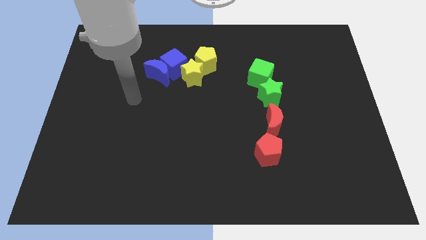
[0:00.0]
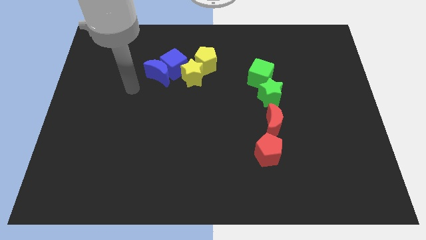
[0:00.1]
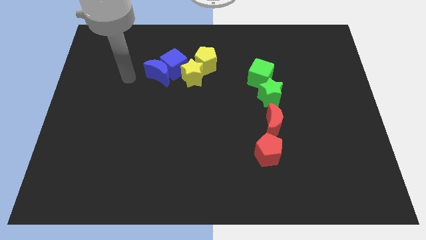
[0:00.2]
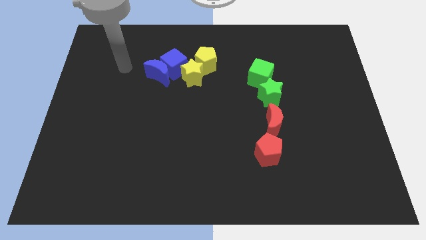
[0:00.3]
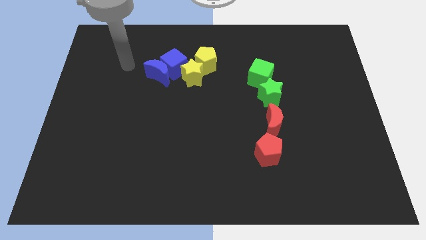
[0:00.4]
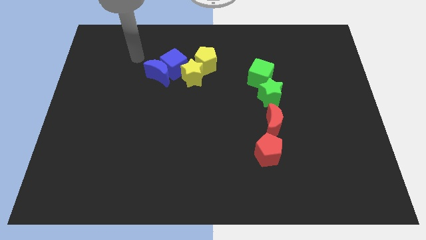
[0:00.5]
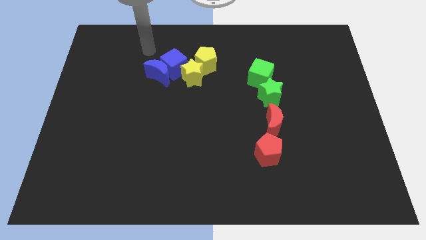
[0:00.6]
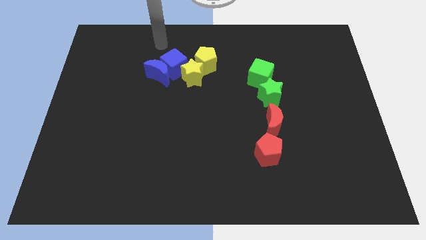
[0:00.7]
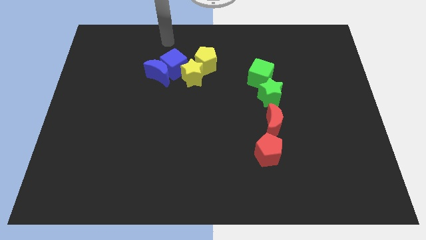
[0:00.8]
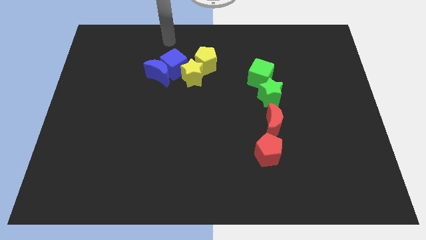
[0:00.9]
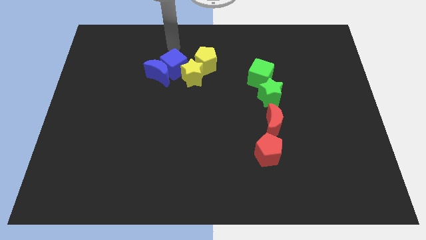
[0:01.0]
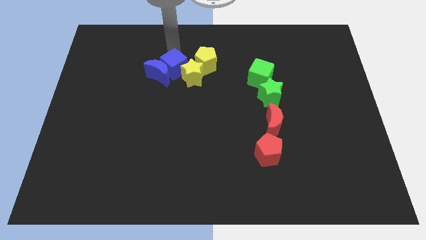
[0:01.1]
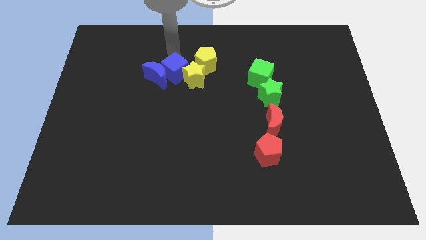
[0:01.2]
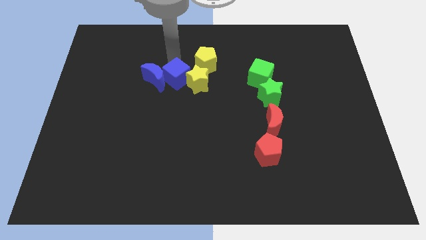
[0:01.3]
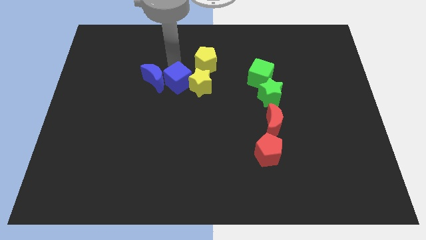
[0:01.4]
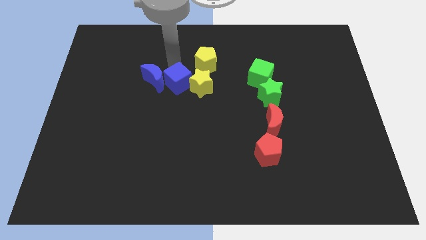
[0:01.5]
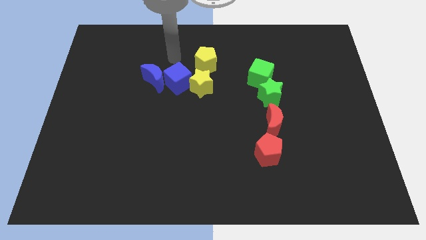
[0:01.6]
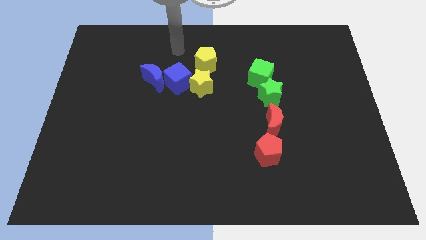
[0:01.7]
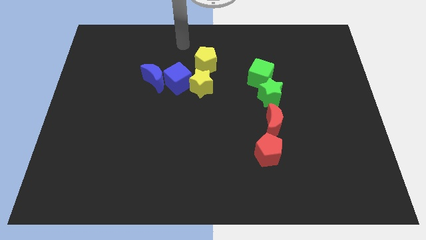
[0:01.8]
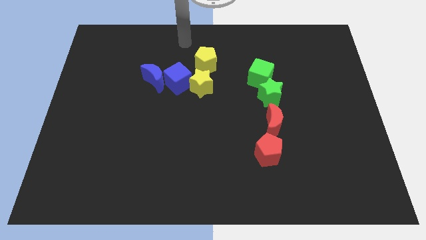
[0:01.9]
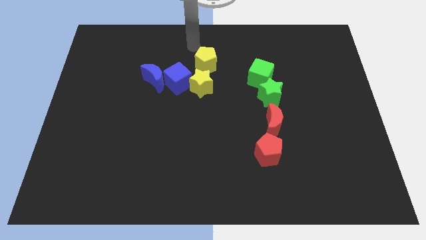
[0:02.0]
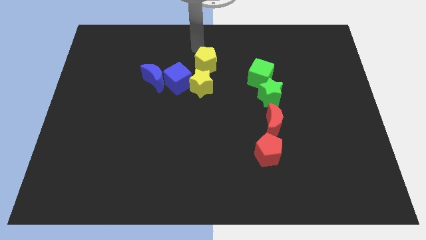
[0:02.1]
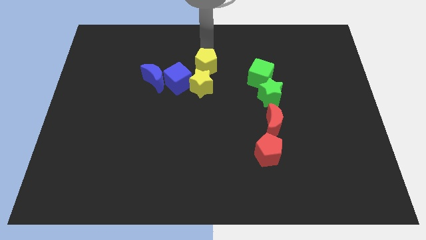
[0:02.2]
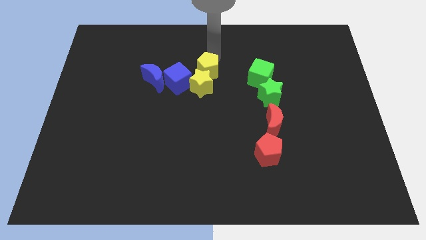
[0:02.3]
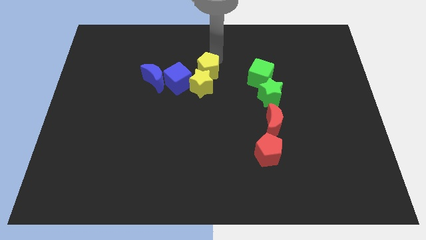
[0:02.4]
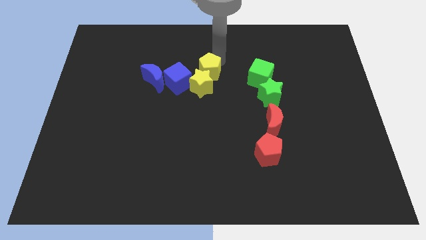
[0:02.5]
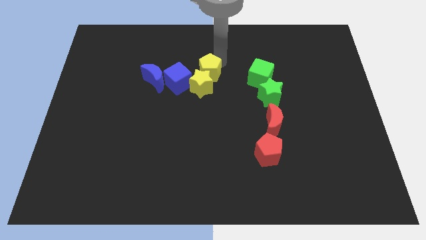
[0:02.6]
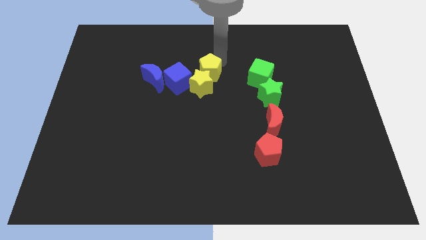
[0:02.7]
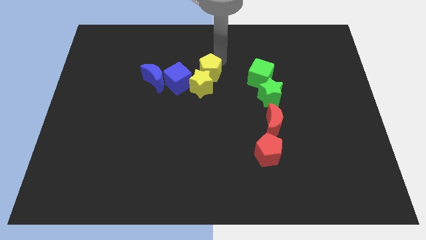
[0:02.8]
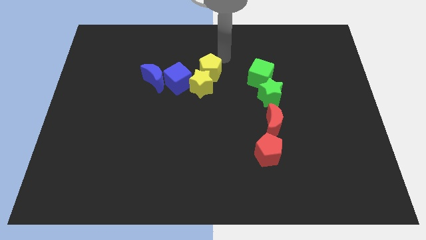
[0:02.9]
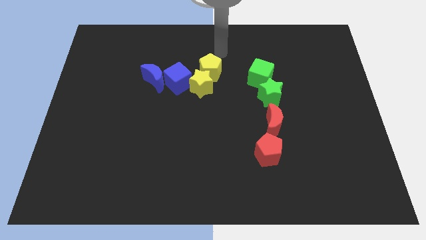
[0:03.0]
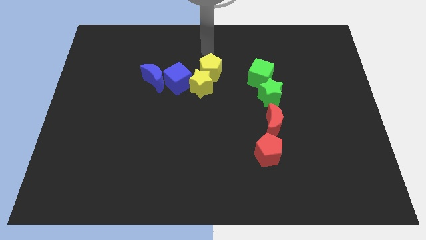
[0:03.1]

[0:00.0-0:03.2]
push blue cube yellow pentagon towards downward

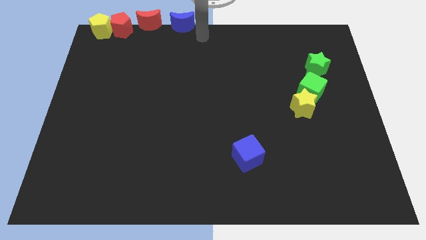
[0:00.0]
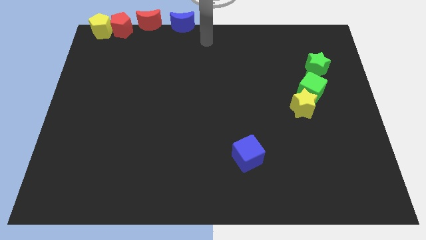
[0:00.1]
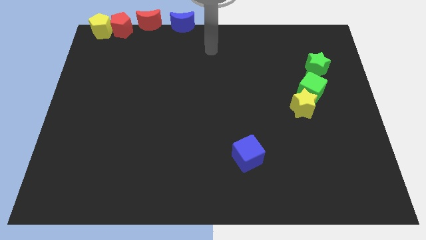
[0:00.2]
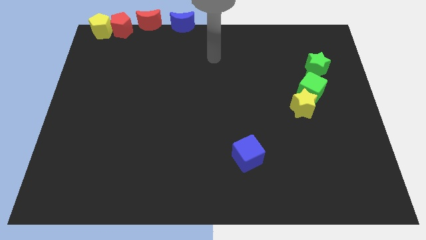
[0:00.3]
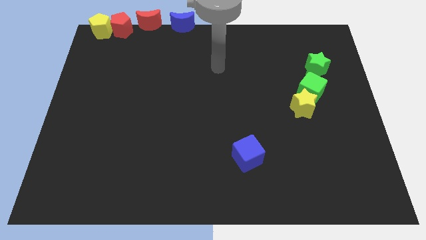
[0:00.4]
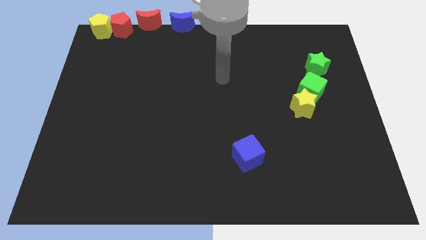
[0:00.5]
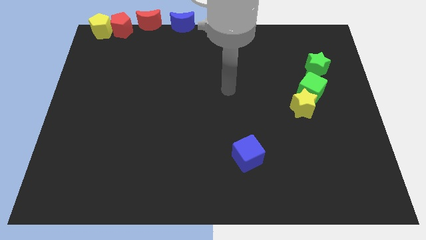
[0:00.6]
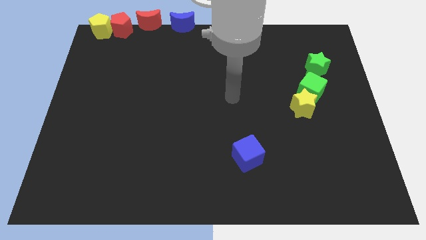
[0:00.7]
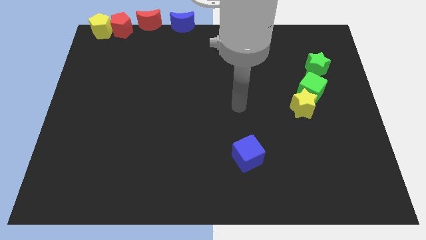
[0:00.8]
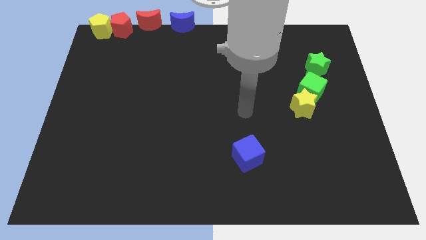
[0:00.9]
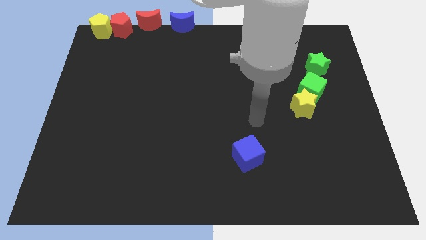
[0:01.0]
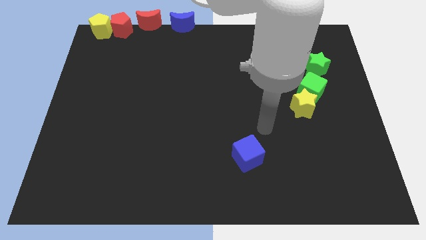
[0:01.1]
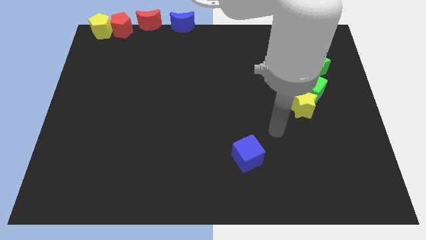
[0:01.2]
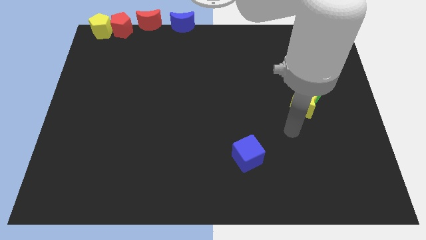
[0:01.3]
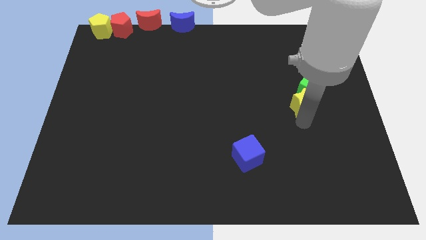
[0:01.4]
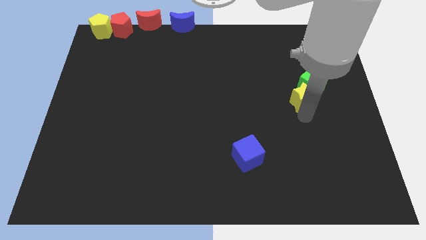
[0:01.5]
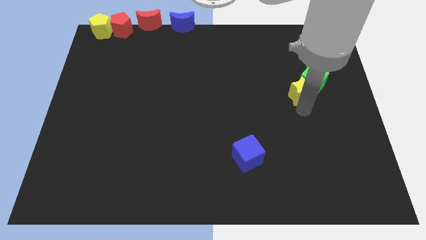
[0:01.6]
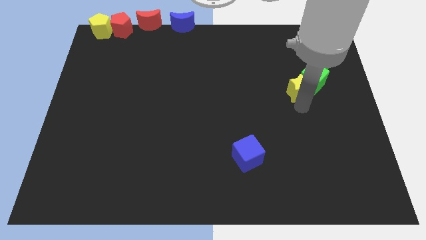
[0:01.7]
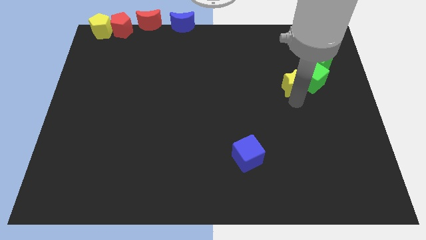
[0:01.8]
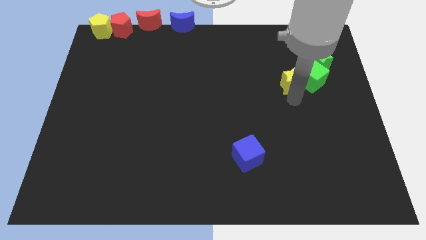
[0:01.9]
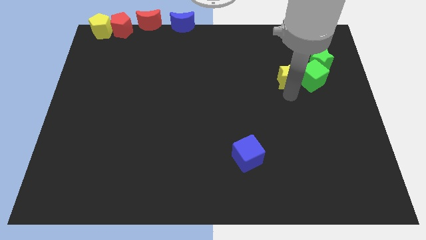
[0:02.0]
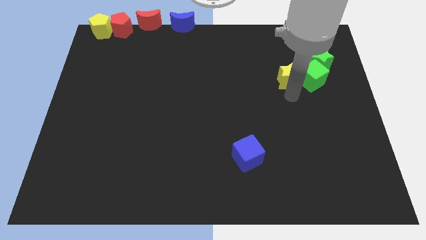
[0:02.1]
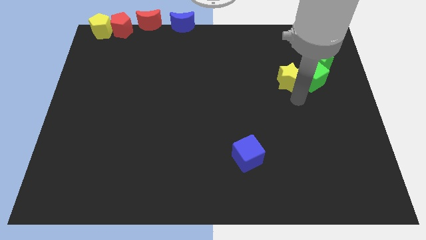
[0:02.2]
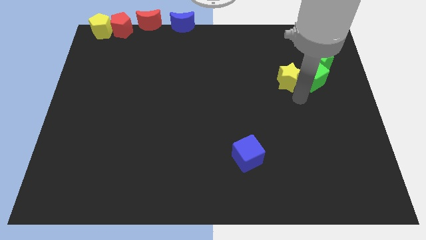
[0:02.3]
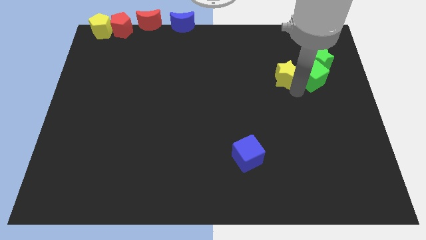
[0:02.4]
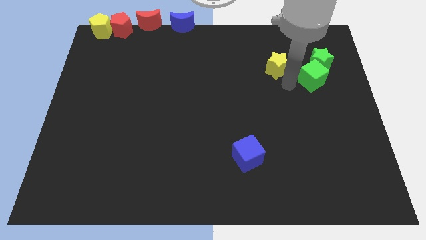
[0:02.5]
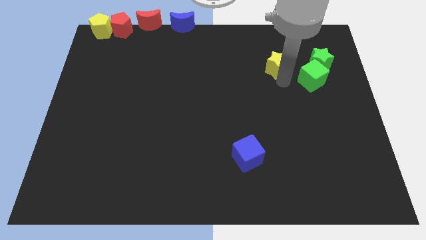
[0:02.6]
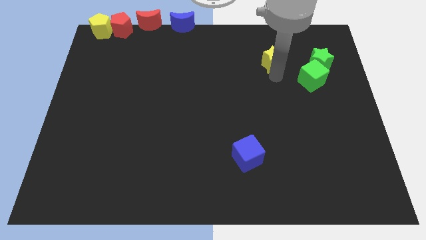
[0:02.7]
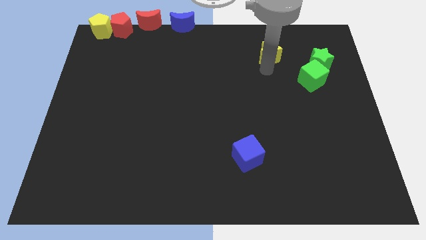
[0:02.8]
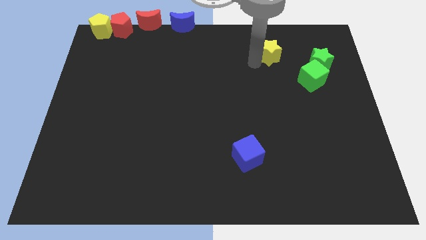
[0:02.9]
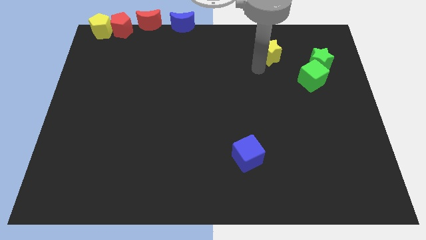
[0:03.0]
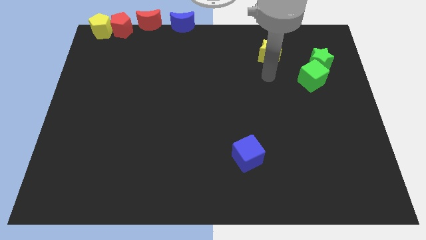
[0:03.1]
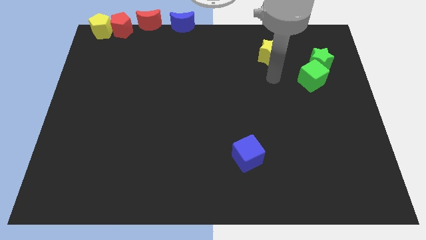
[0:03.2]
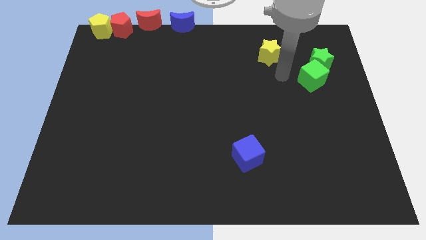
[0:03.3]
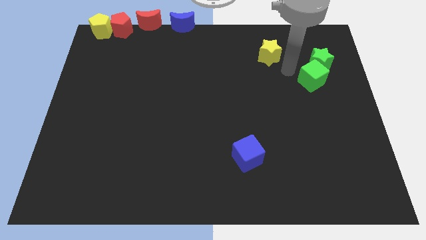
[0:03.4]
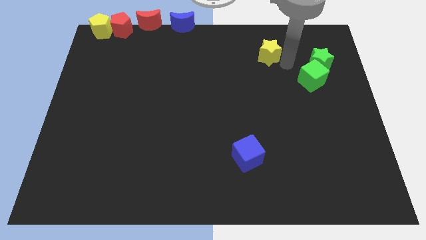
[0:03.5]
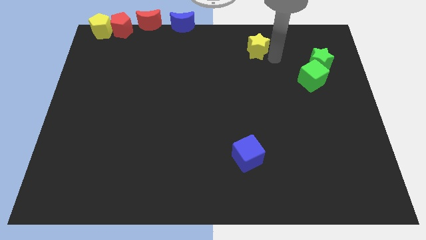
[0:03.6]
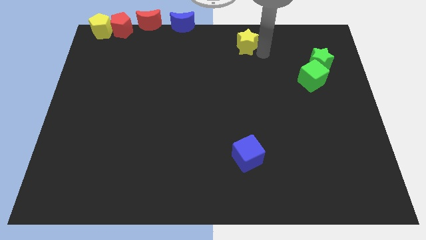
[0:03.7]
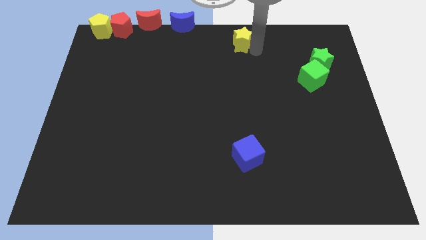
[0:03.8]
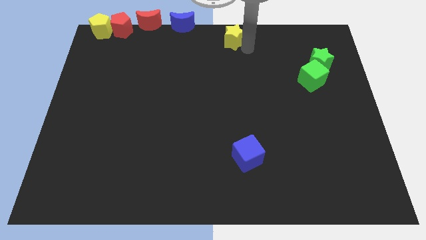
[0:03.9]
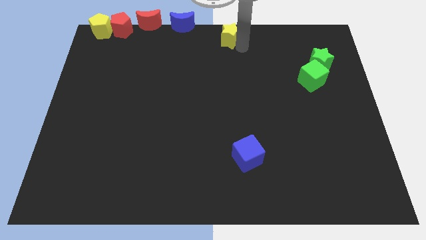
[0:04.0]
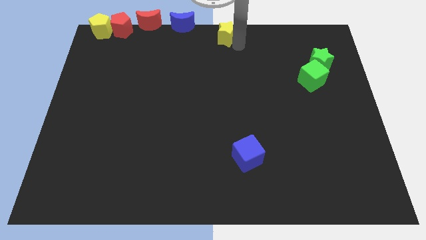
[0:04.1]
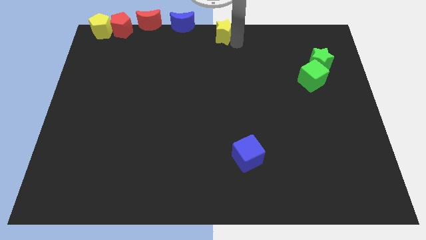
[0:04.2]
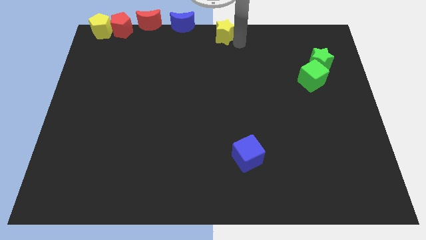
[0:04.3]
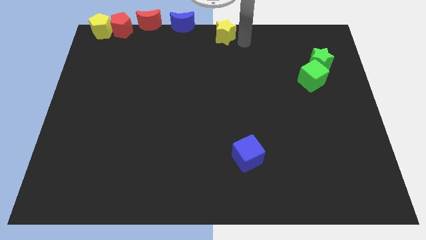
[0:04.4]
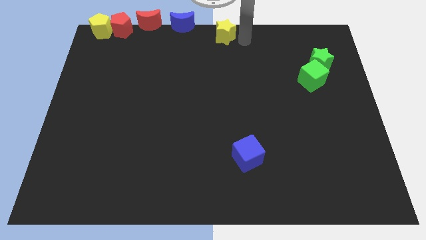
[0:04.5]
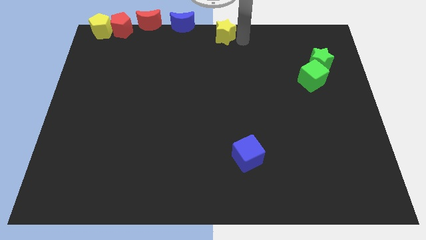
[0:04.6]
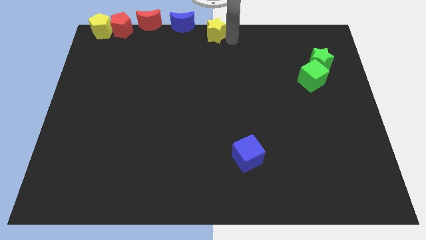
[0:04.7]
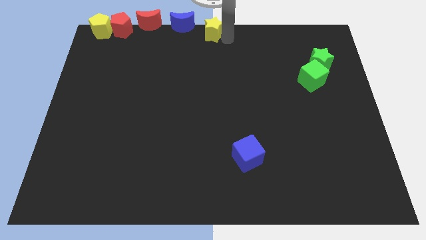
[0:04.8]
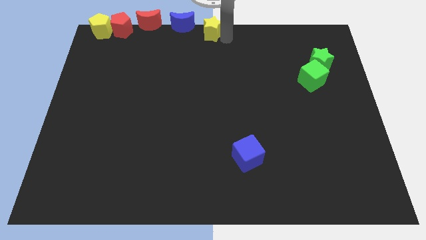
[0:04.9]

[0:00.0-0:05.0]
move the yellow star to the right of the blue crescent

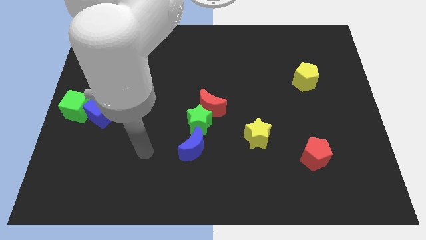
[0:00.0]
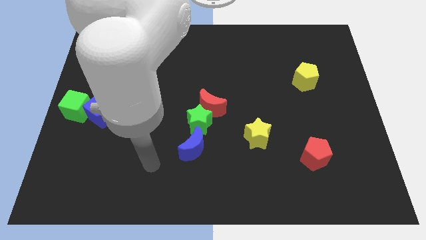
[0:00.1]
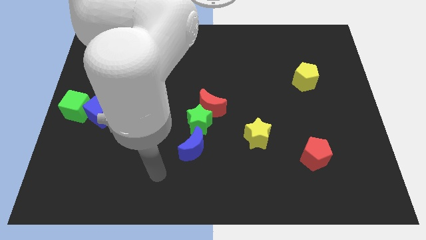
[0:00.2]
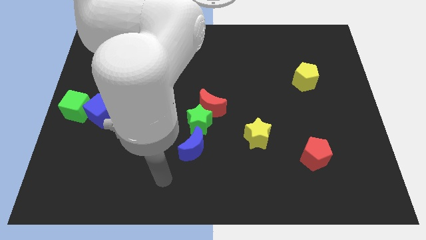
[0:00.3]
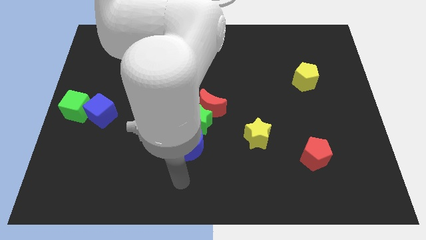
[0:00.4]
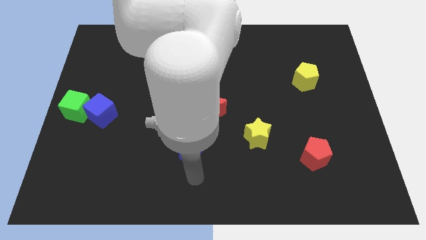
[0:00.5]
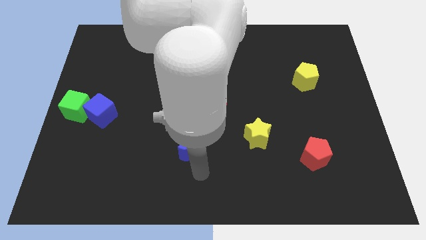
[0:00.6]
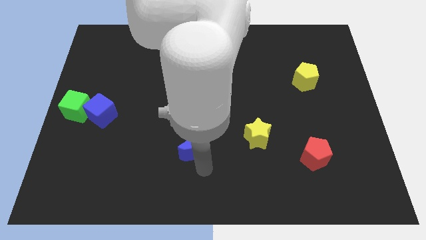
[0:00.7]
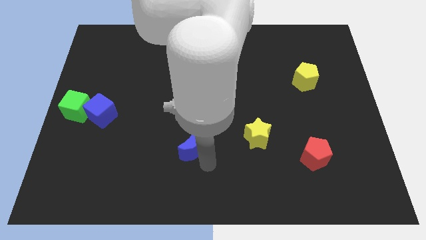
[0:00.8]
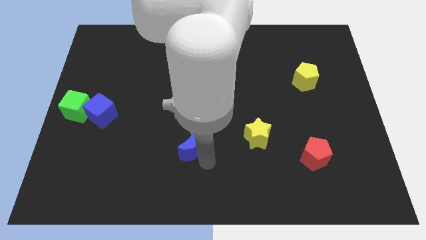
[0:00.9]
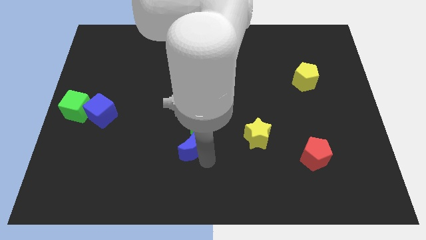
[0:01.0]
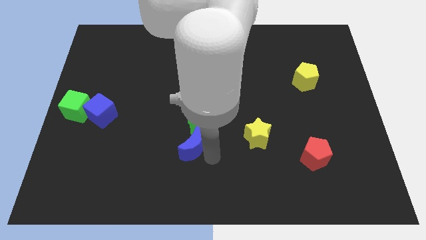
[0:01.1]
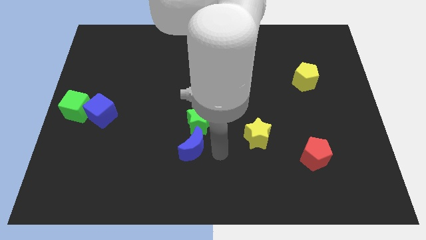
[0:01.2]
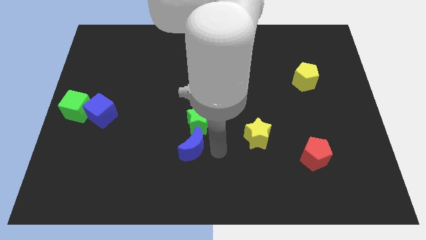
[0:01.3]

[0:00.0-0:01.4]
point your arm at the right side of the blue moon
